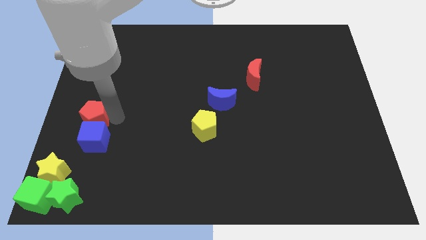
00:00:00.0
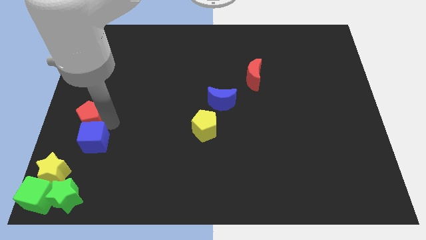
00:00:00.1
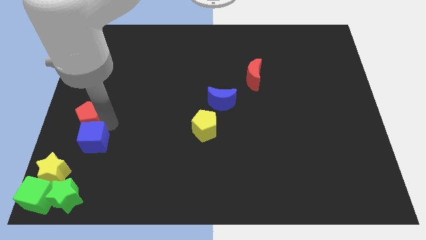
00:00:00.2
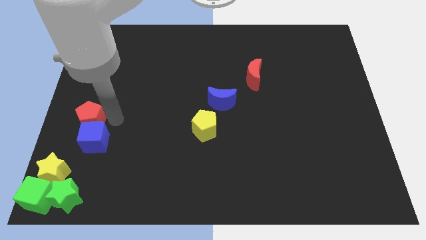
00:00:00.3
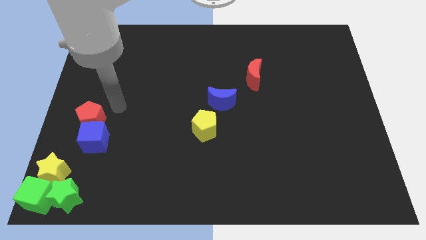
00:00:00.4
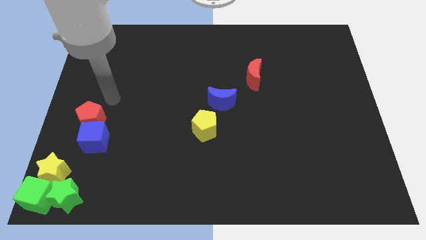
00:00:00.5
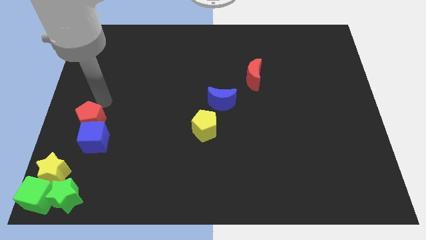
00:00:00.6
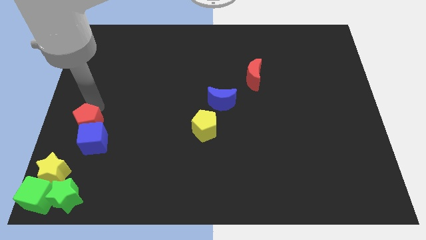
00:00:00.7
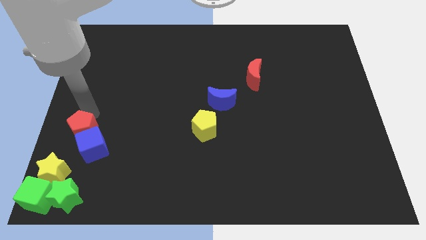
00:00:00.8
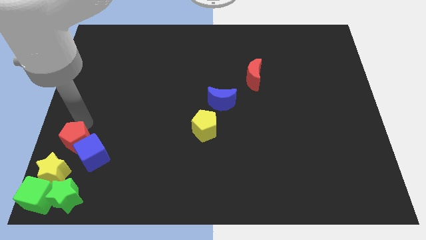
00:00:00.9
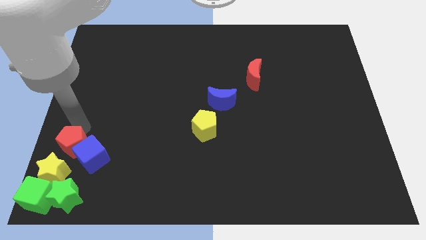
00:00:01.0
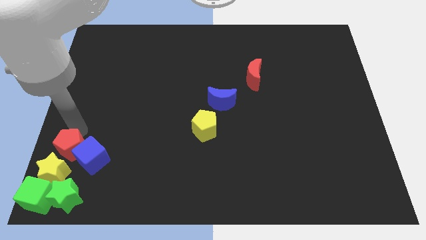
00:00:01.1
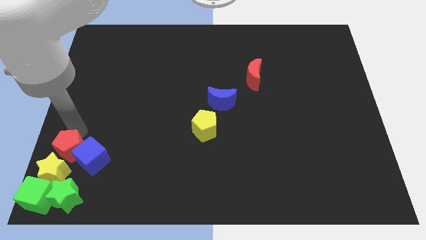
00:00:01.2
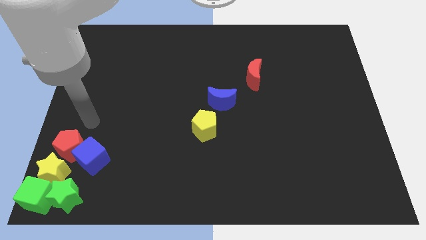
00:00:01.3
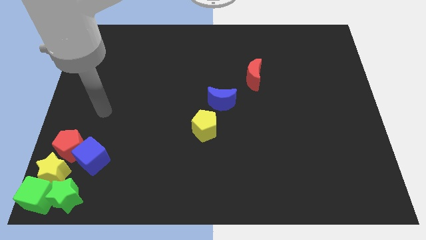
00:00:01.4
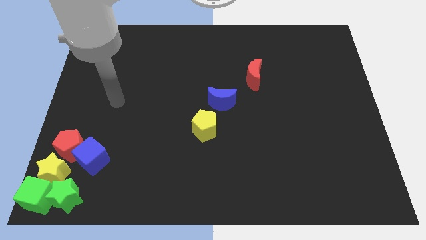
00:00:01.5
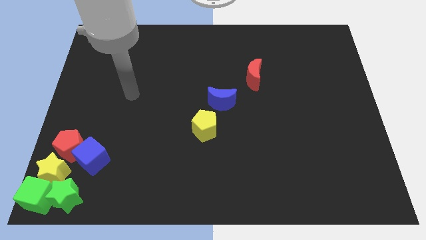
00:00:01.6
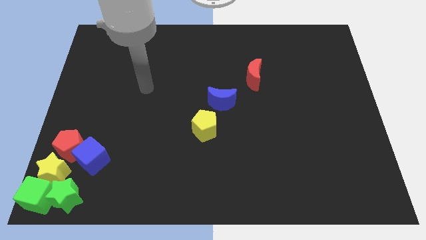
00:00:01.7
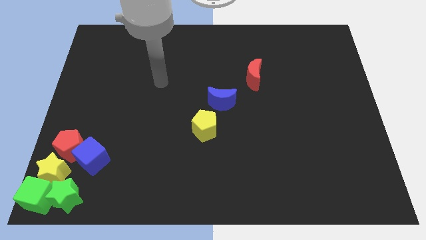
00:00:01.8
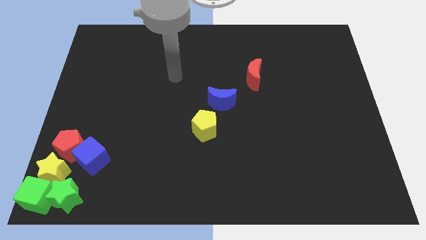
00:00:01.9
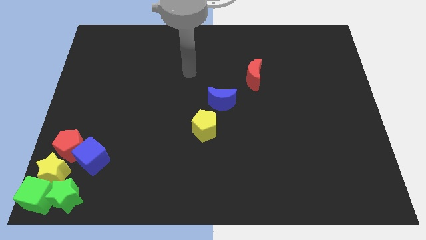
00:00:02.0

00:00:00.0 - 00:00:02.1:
push red pentagon and blue cube together towards bottom left

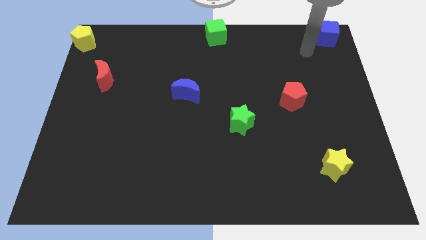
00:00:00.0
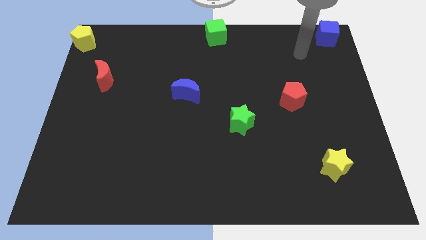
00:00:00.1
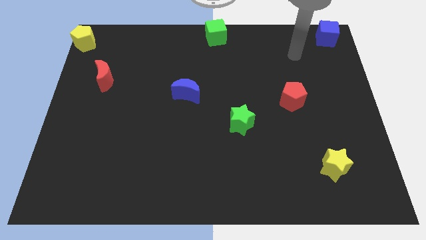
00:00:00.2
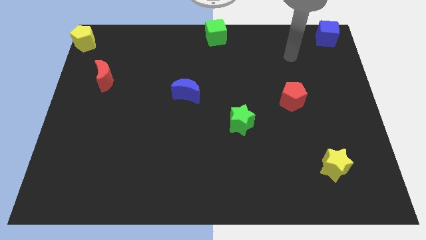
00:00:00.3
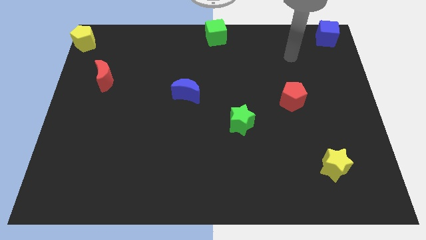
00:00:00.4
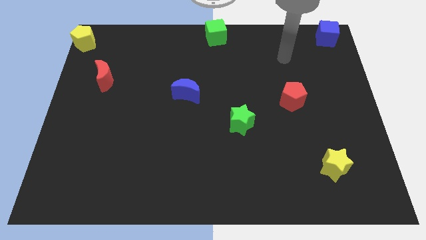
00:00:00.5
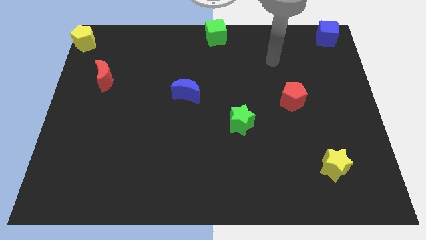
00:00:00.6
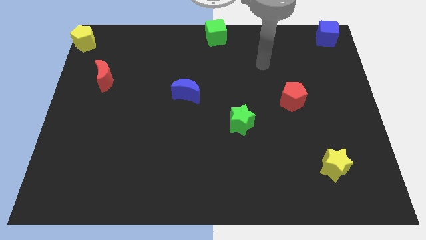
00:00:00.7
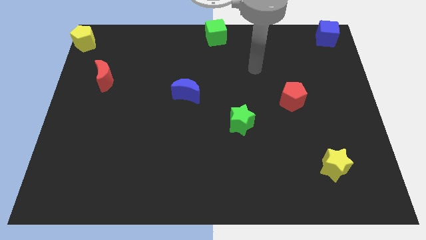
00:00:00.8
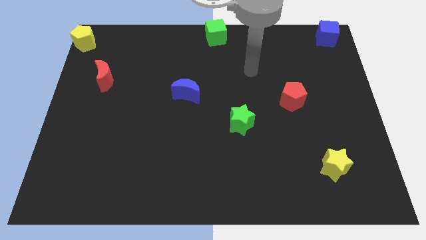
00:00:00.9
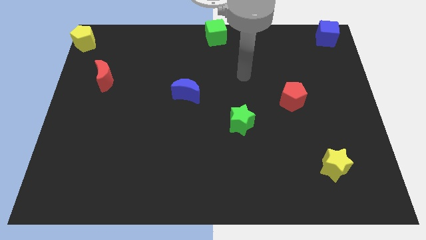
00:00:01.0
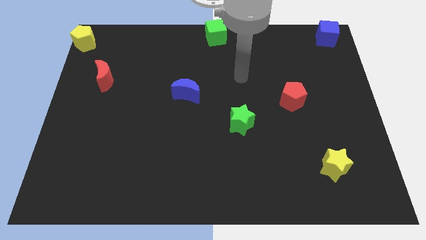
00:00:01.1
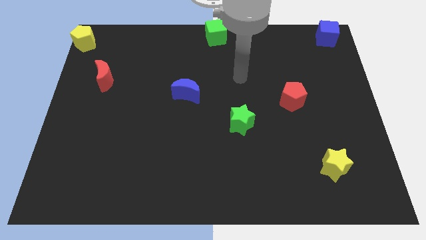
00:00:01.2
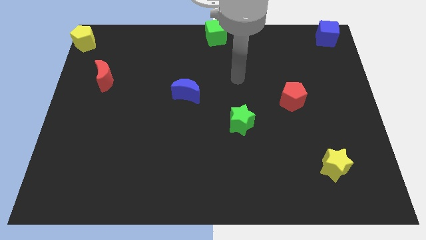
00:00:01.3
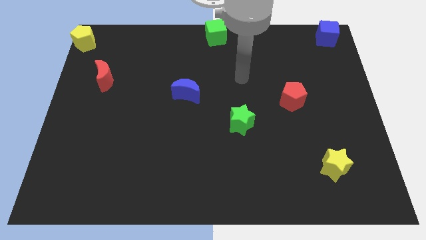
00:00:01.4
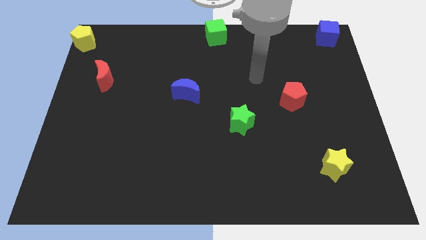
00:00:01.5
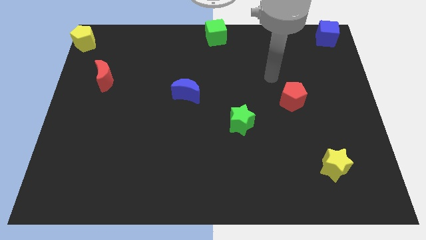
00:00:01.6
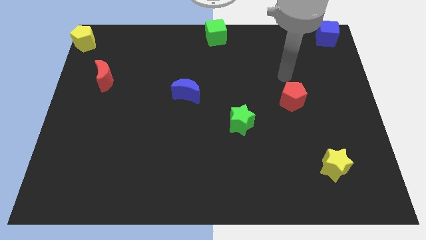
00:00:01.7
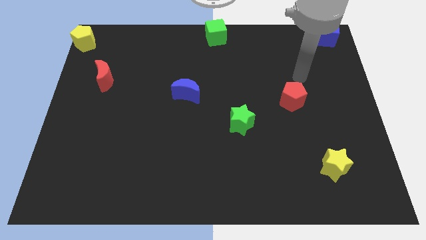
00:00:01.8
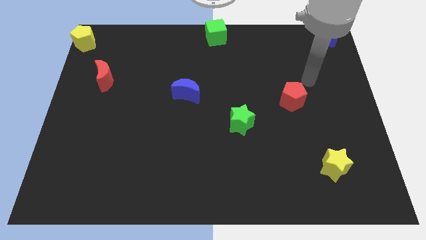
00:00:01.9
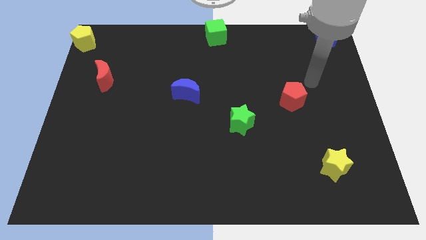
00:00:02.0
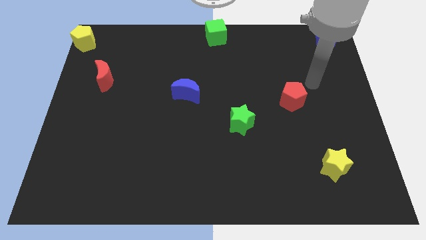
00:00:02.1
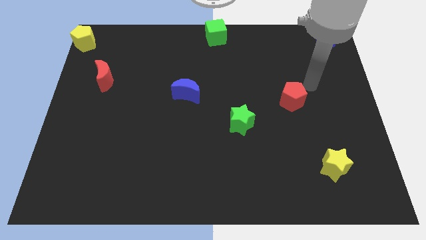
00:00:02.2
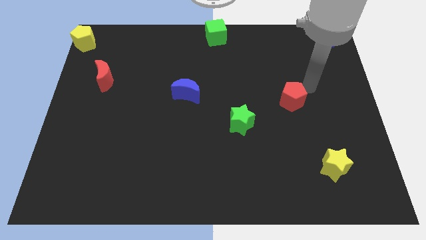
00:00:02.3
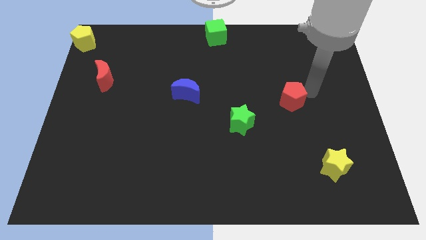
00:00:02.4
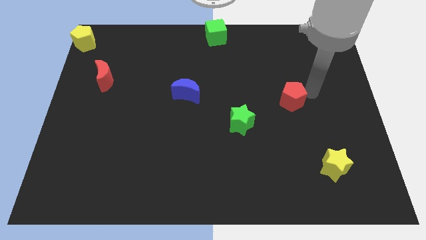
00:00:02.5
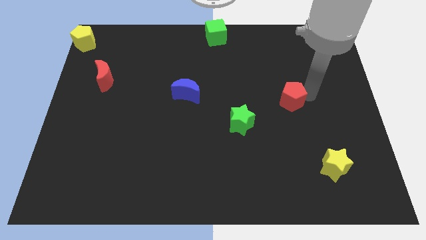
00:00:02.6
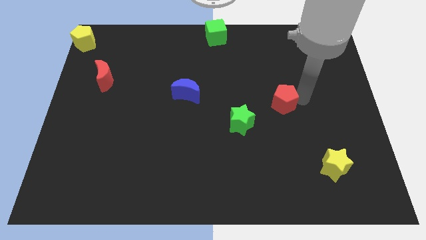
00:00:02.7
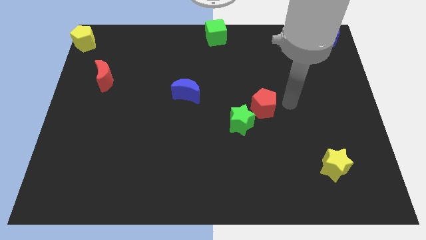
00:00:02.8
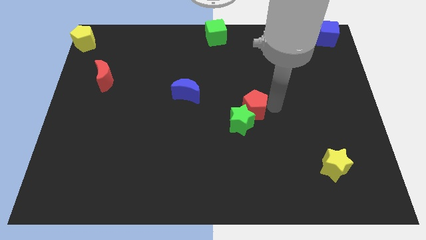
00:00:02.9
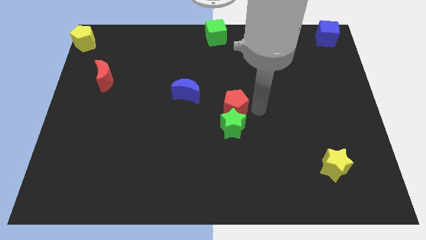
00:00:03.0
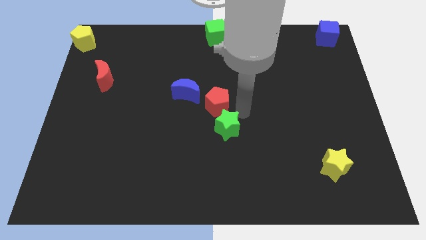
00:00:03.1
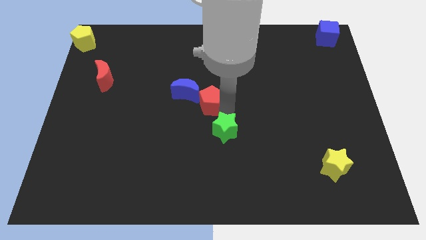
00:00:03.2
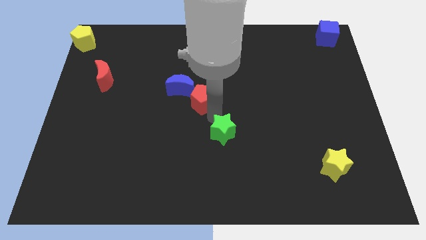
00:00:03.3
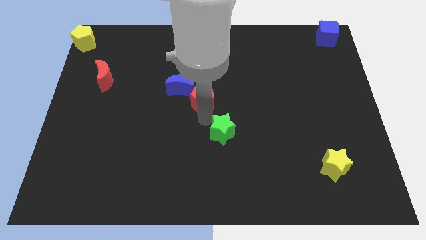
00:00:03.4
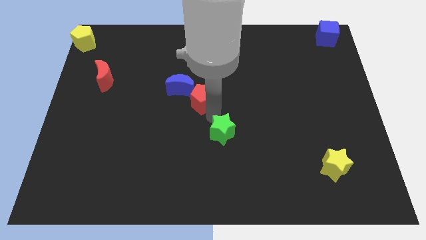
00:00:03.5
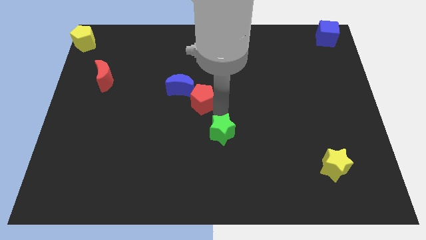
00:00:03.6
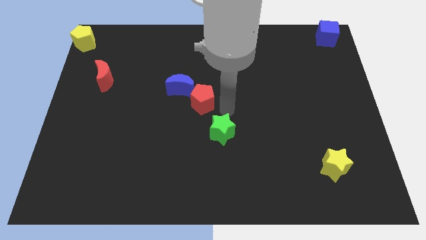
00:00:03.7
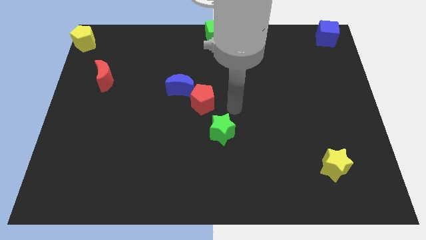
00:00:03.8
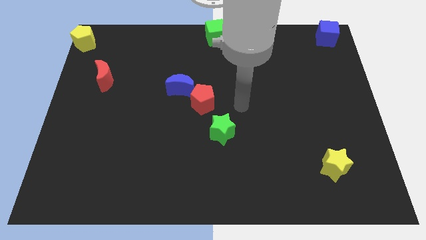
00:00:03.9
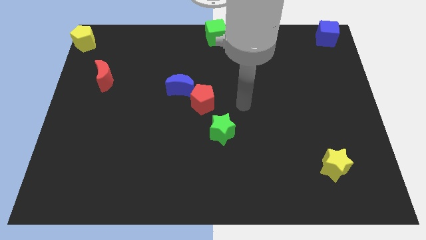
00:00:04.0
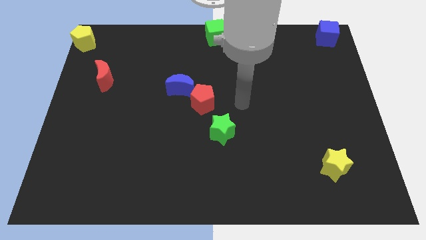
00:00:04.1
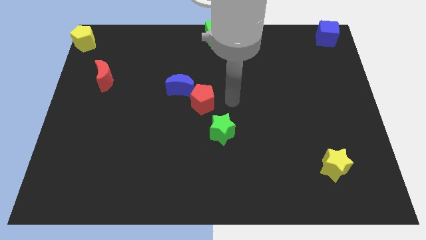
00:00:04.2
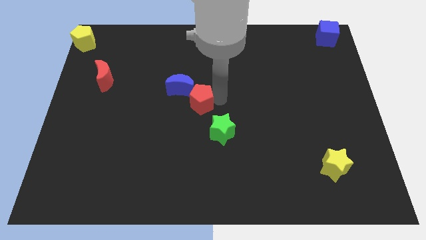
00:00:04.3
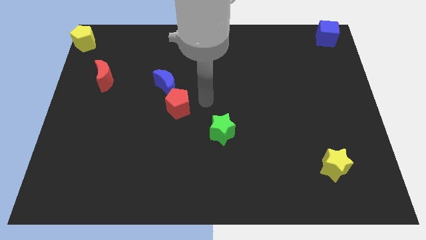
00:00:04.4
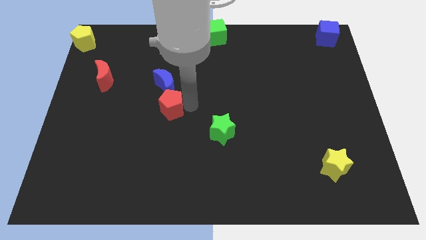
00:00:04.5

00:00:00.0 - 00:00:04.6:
move the red pentagon to the bottom of the blue crescent

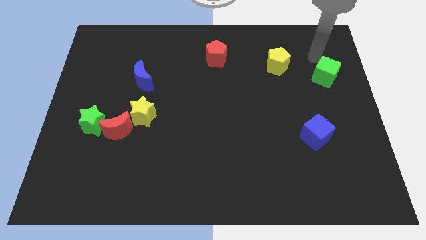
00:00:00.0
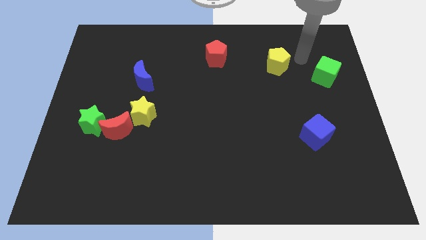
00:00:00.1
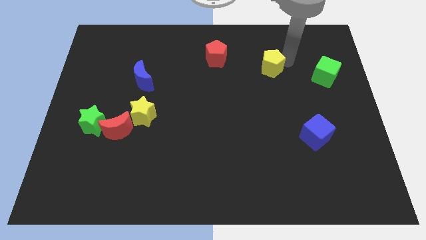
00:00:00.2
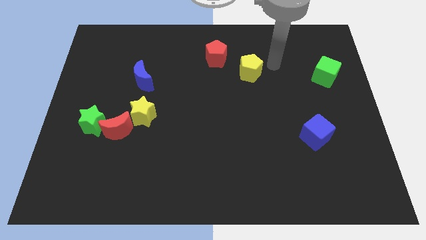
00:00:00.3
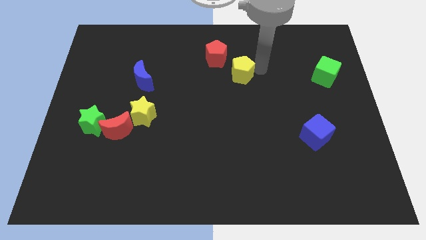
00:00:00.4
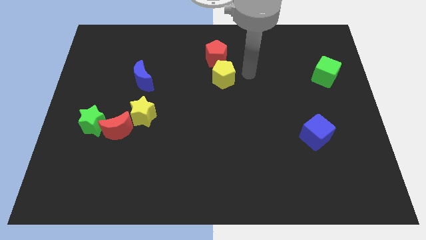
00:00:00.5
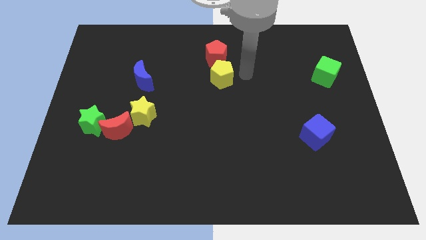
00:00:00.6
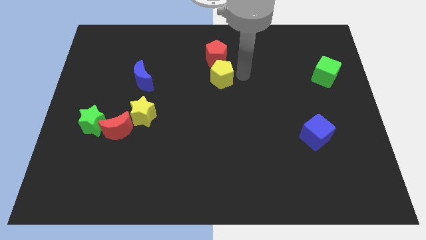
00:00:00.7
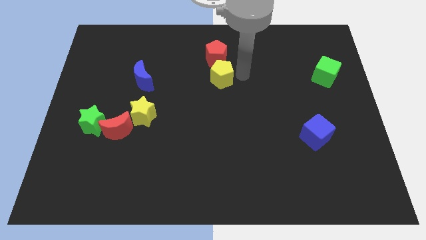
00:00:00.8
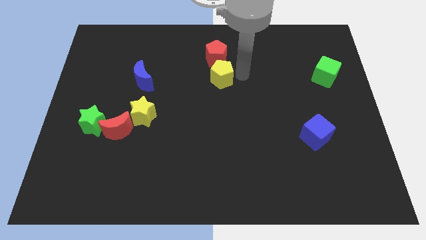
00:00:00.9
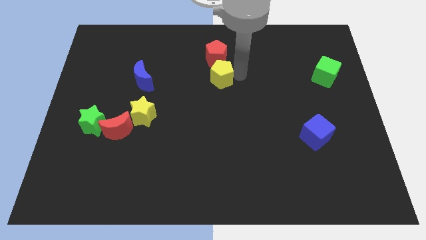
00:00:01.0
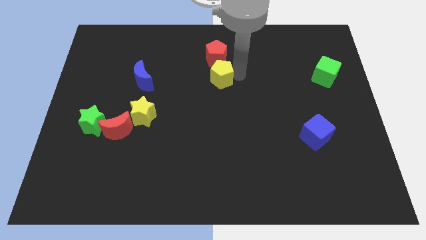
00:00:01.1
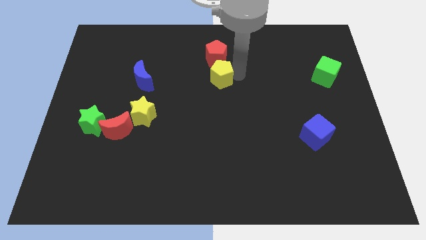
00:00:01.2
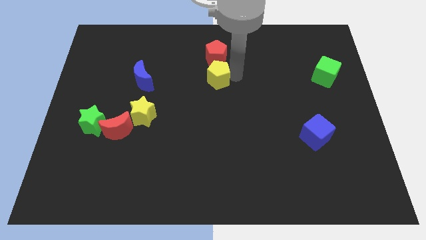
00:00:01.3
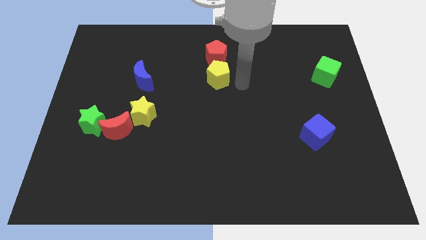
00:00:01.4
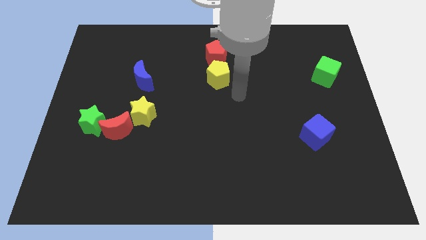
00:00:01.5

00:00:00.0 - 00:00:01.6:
place the yellow pentagon below the red pentagon

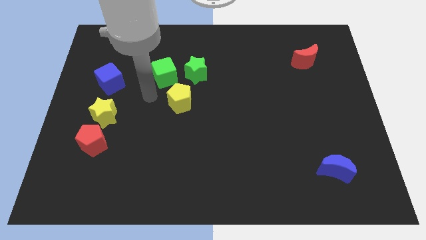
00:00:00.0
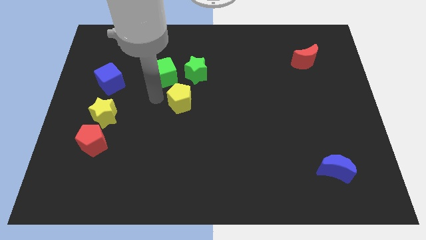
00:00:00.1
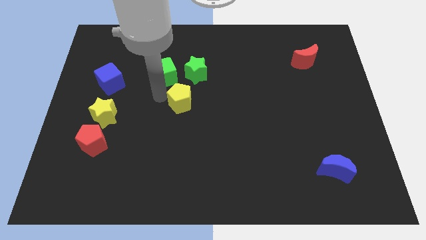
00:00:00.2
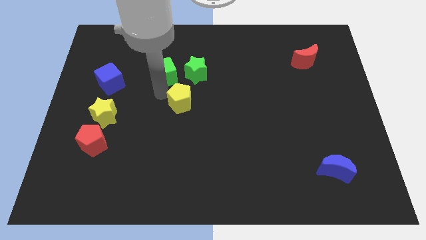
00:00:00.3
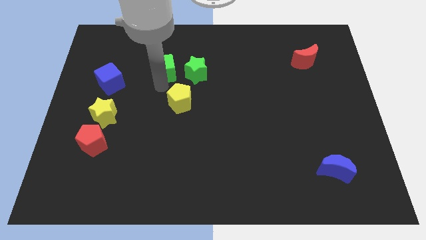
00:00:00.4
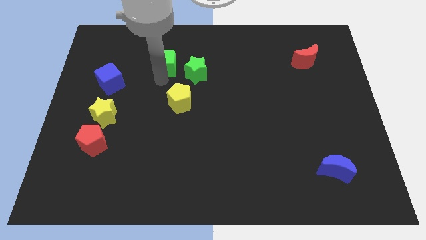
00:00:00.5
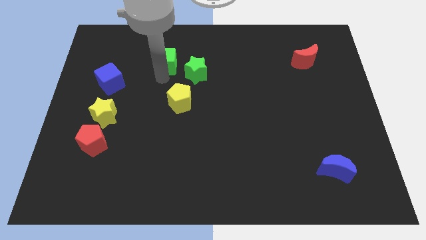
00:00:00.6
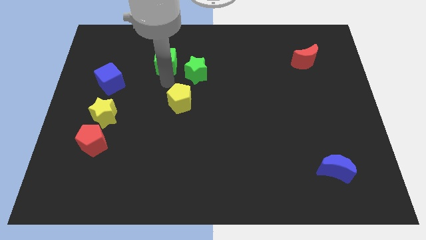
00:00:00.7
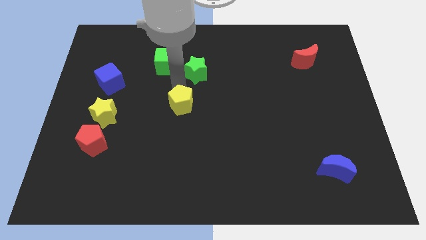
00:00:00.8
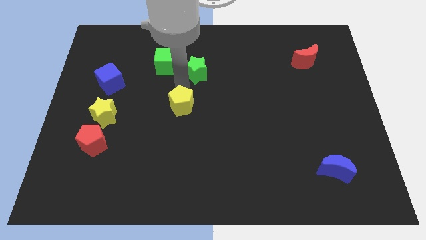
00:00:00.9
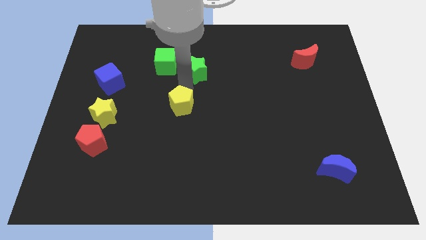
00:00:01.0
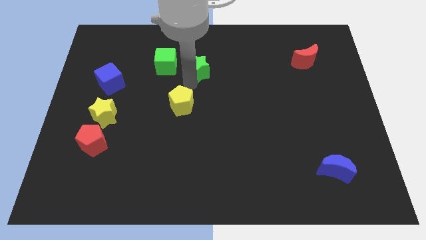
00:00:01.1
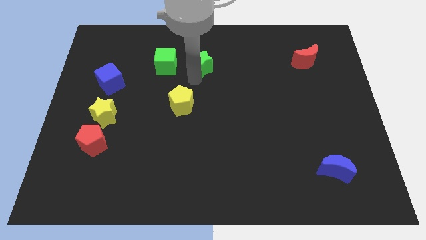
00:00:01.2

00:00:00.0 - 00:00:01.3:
push the yellow pentagon slightly down
